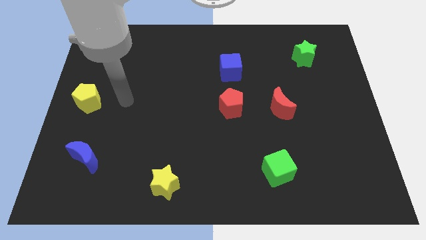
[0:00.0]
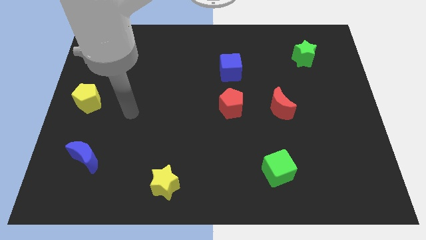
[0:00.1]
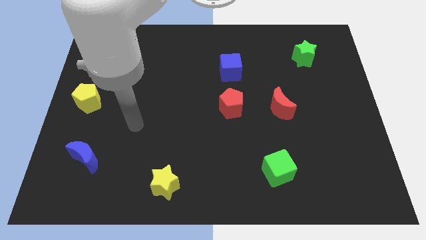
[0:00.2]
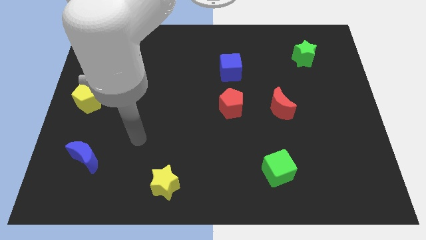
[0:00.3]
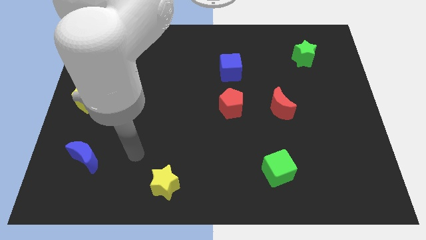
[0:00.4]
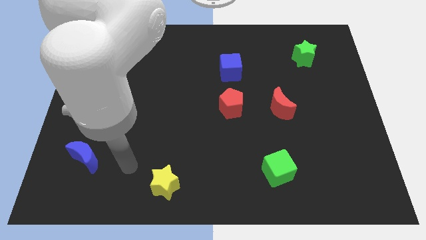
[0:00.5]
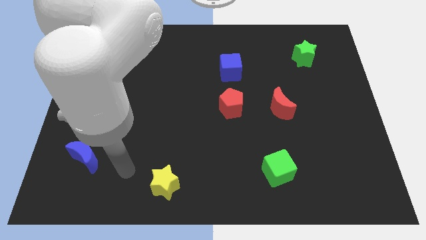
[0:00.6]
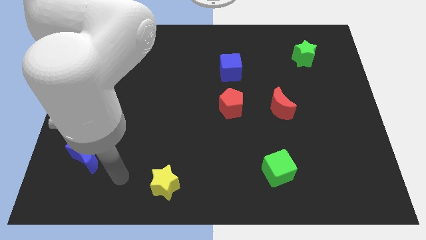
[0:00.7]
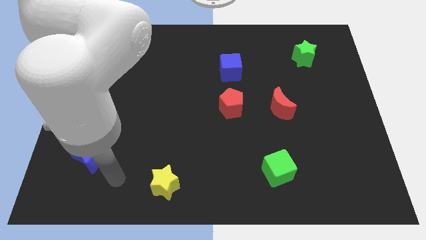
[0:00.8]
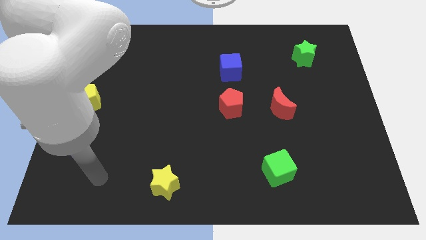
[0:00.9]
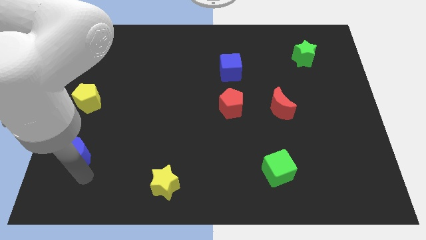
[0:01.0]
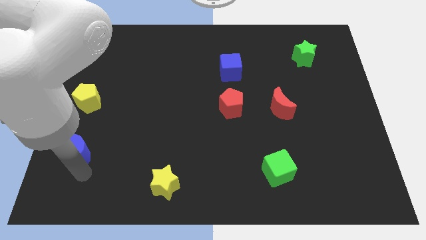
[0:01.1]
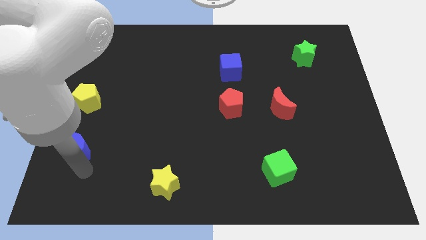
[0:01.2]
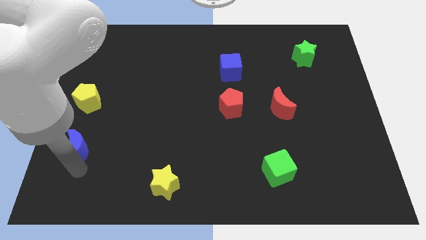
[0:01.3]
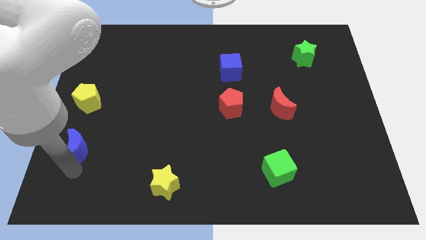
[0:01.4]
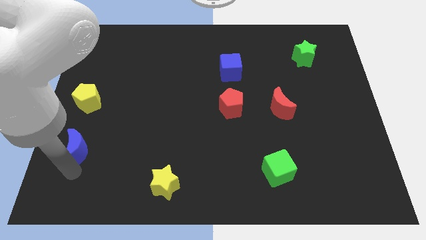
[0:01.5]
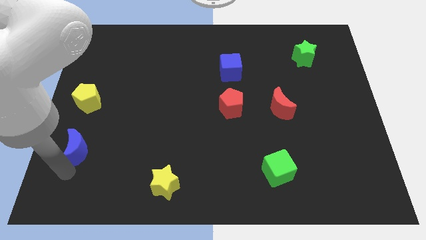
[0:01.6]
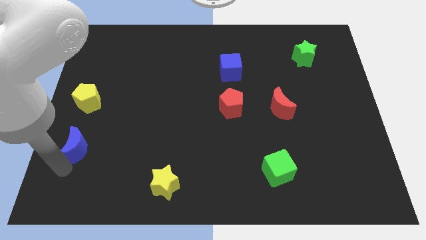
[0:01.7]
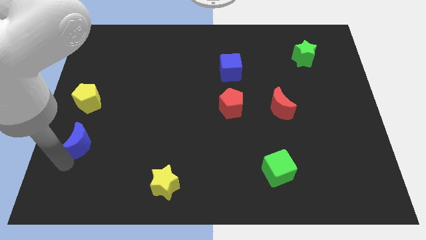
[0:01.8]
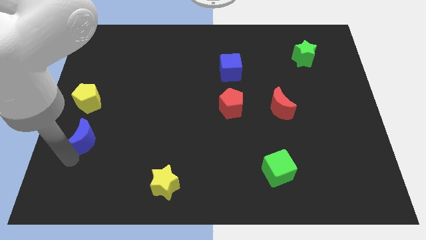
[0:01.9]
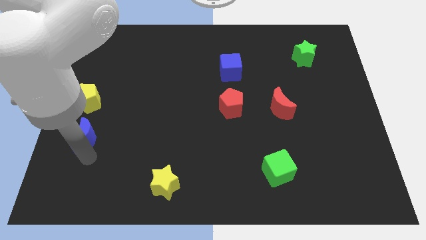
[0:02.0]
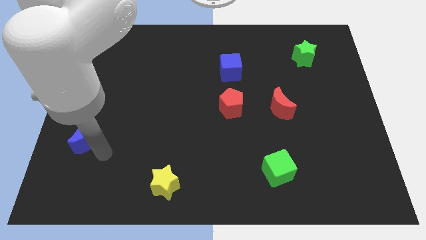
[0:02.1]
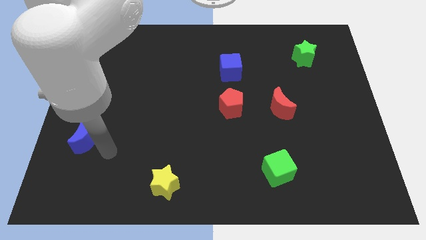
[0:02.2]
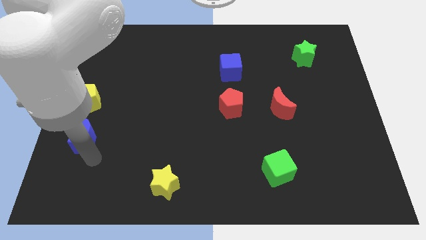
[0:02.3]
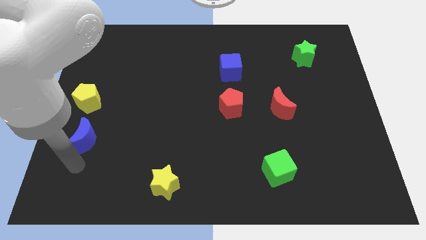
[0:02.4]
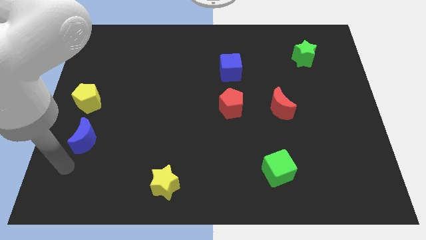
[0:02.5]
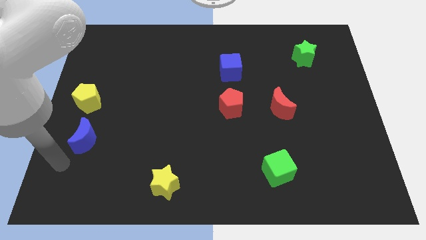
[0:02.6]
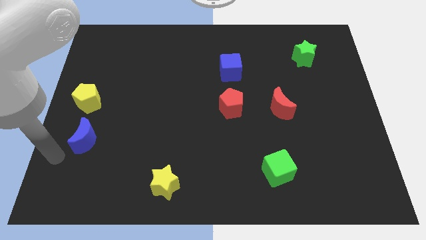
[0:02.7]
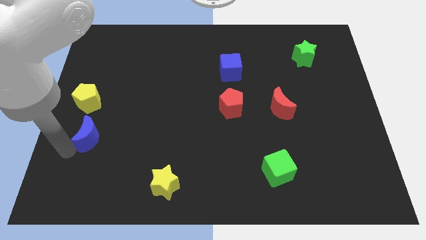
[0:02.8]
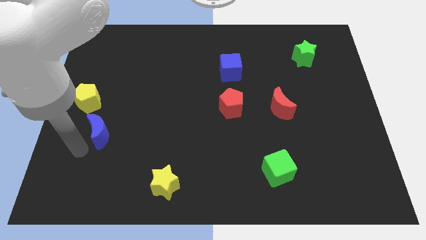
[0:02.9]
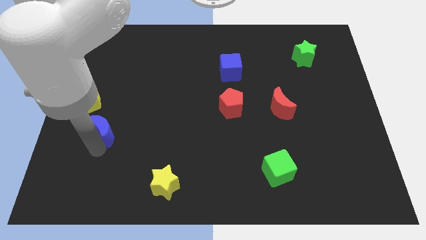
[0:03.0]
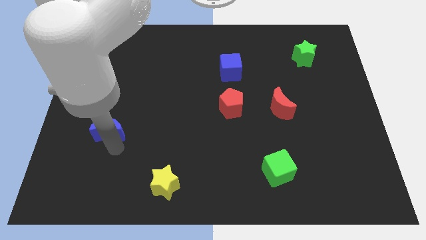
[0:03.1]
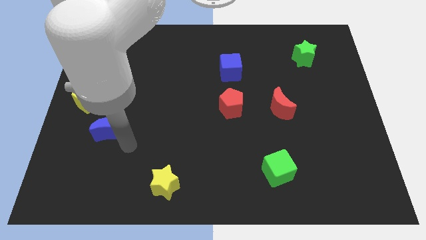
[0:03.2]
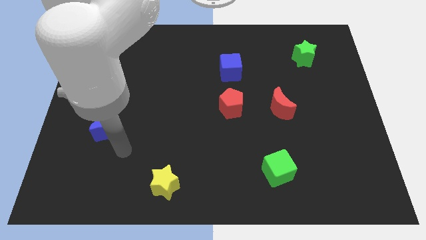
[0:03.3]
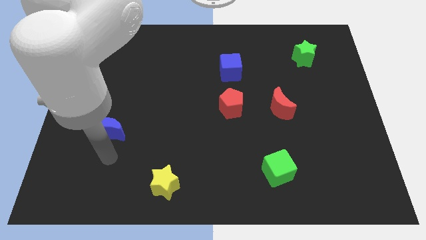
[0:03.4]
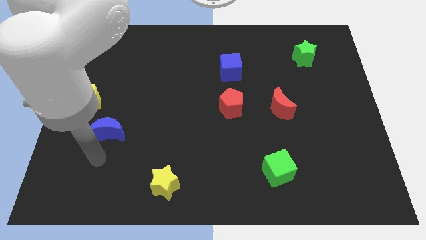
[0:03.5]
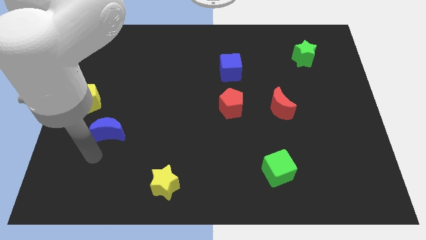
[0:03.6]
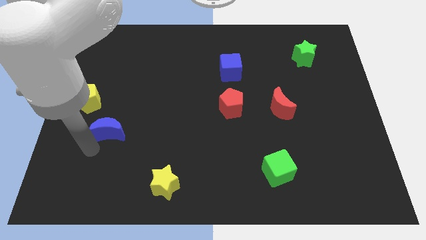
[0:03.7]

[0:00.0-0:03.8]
move the blue crescent between yellow blocks

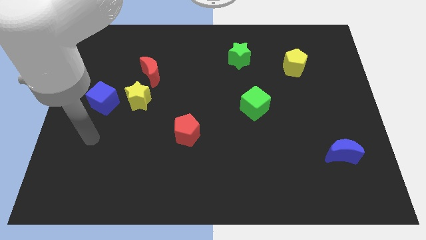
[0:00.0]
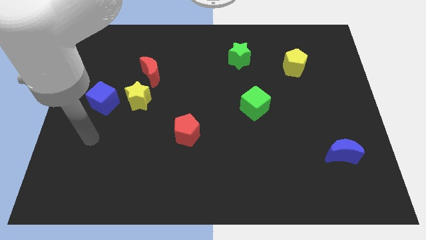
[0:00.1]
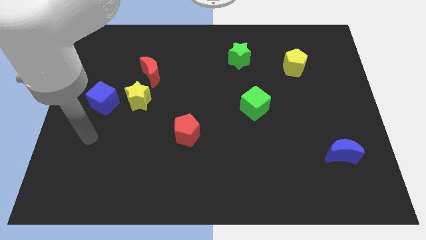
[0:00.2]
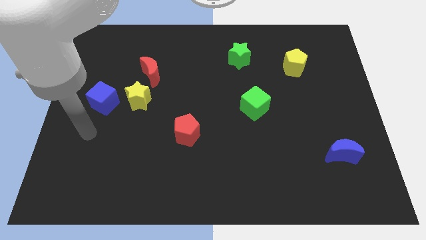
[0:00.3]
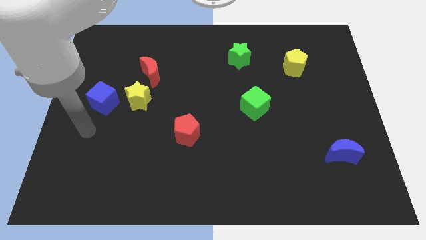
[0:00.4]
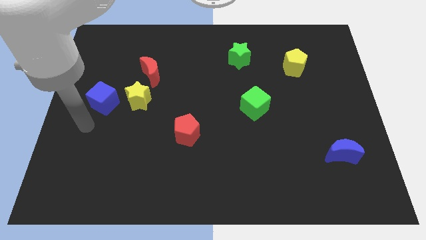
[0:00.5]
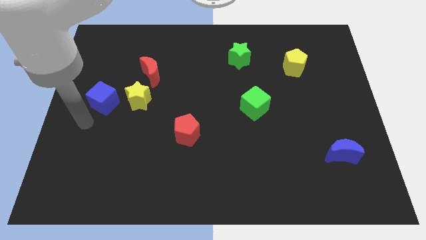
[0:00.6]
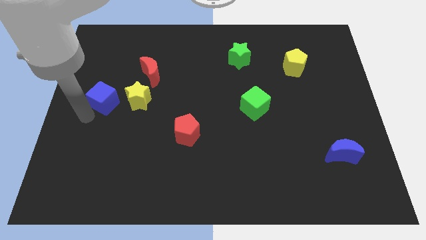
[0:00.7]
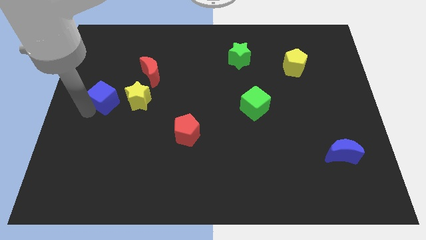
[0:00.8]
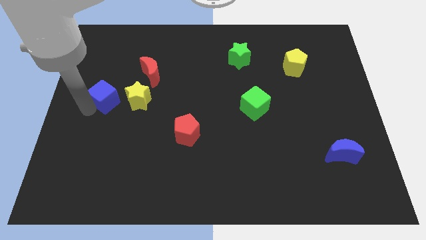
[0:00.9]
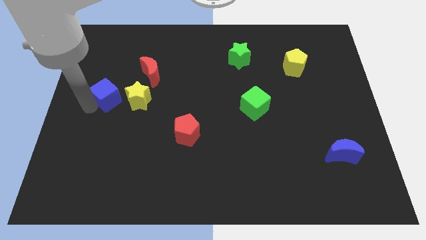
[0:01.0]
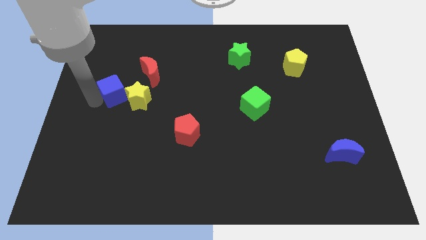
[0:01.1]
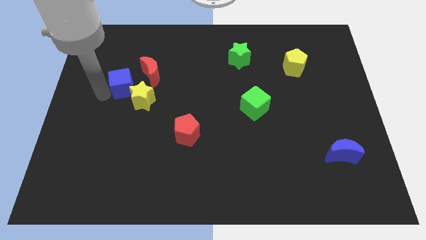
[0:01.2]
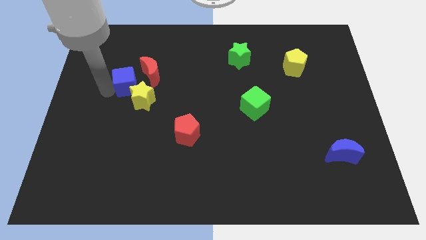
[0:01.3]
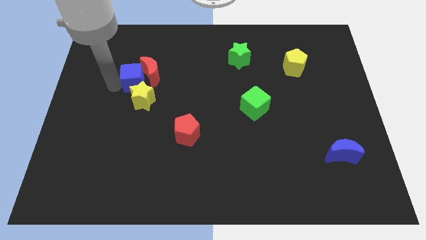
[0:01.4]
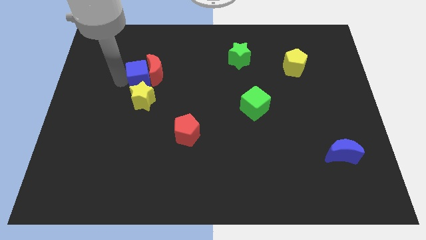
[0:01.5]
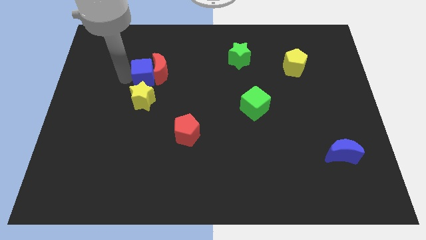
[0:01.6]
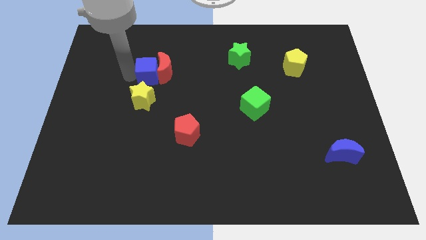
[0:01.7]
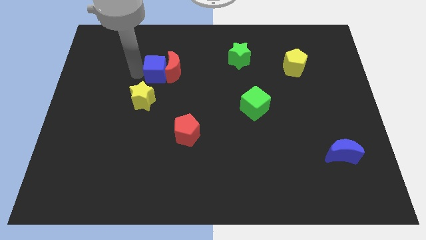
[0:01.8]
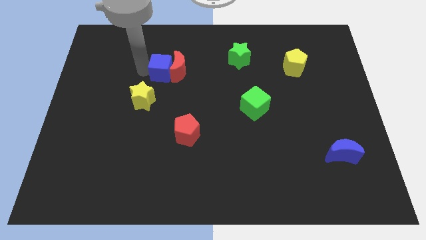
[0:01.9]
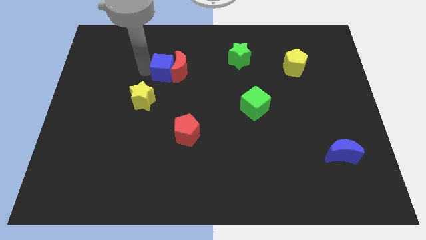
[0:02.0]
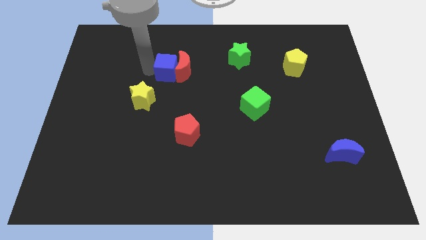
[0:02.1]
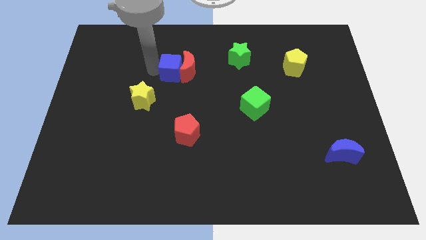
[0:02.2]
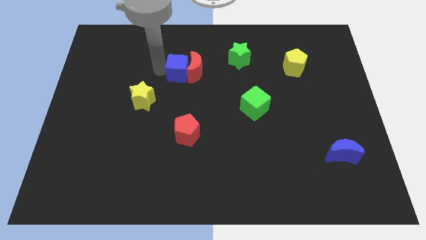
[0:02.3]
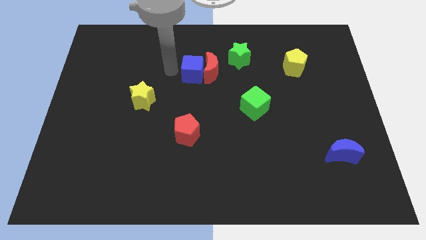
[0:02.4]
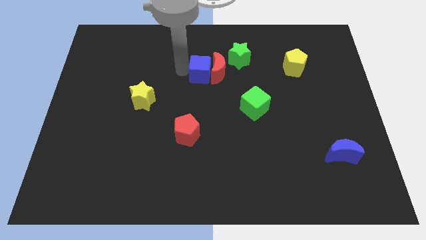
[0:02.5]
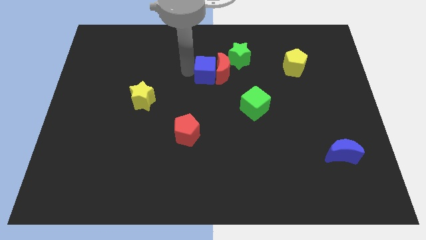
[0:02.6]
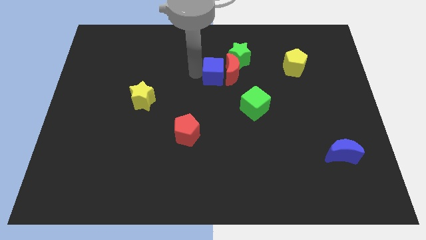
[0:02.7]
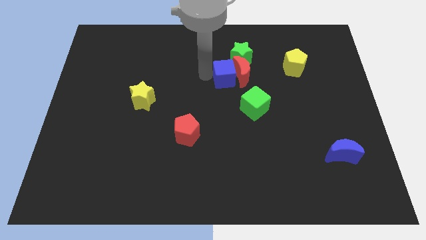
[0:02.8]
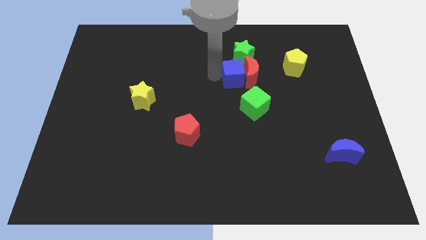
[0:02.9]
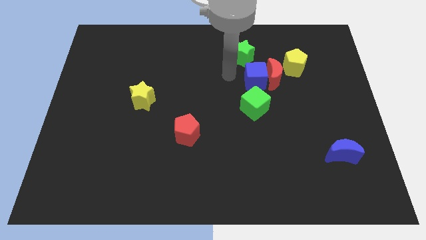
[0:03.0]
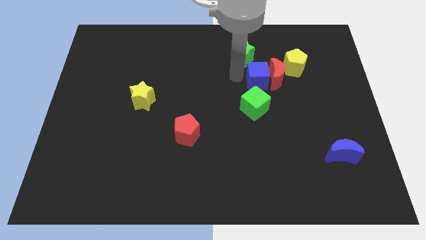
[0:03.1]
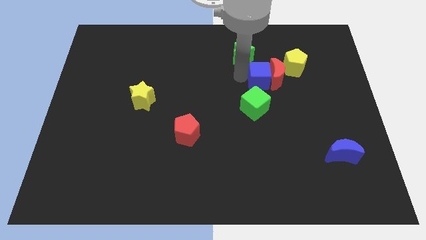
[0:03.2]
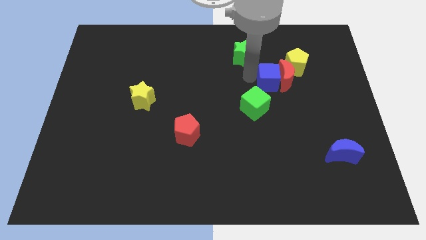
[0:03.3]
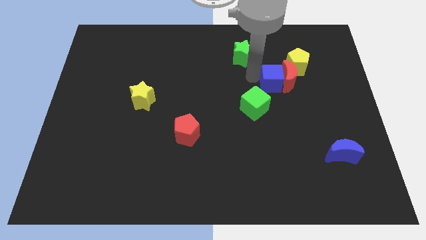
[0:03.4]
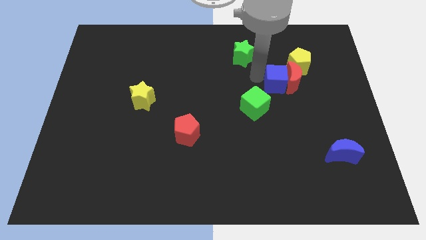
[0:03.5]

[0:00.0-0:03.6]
push the red crescent and blue cube to the bottom left side of the yellow pentagon

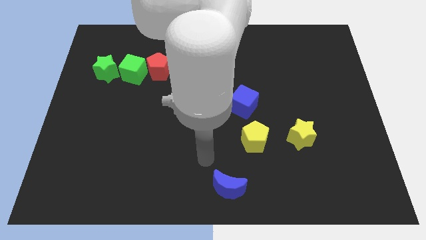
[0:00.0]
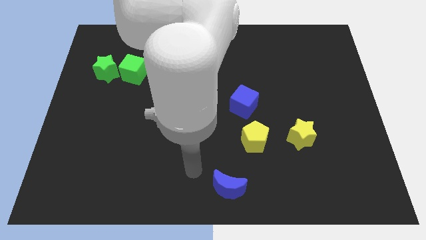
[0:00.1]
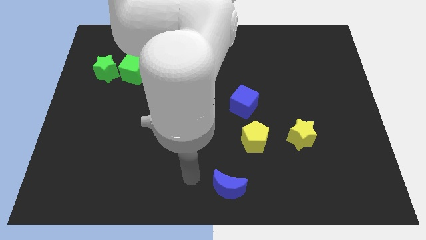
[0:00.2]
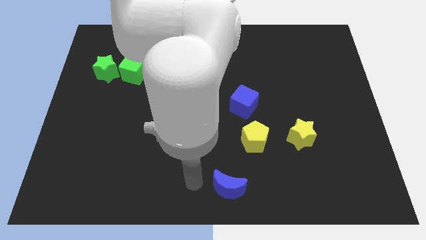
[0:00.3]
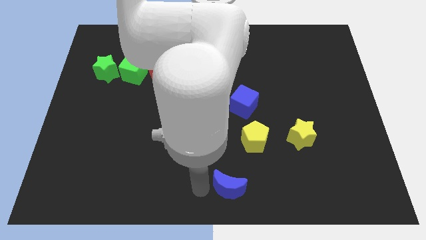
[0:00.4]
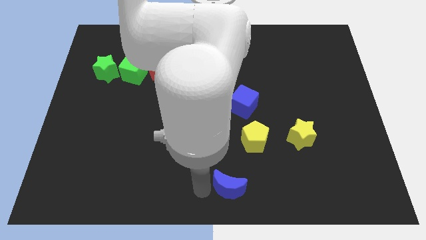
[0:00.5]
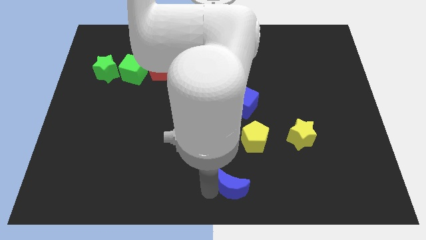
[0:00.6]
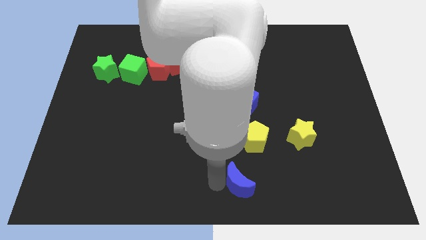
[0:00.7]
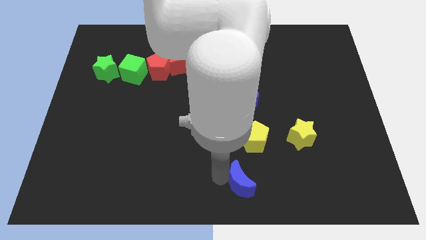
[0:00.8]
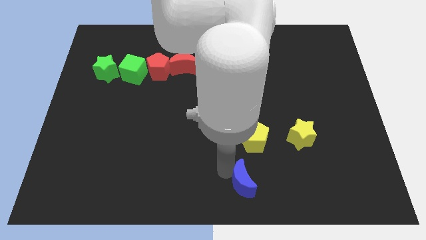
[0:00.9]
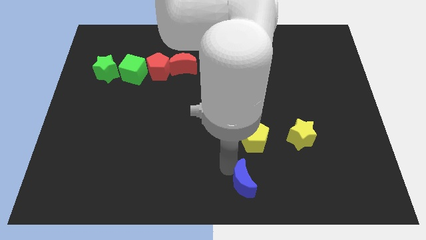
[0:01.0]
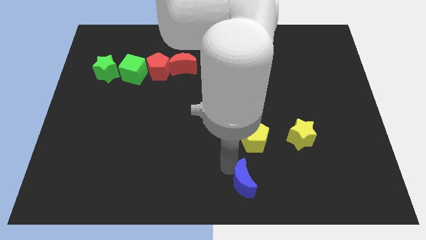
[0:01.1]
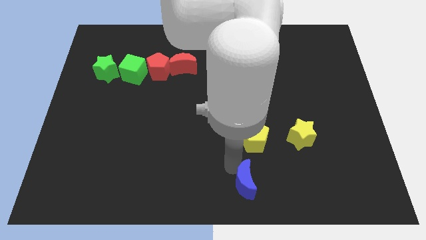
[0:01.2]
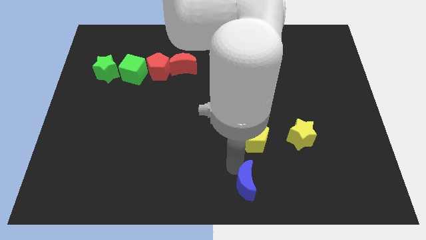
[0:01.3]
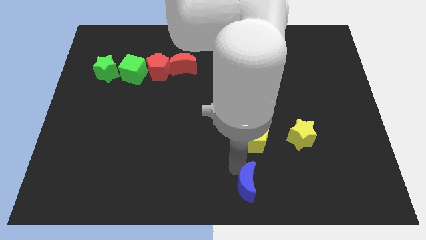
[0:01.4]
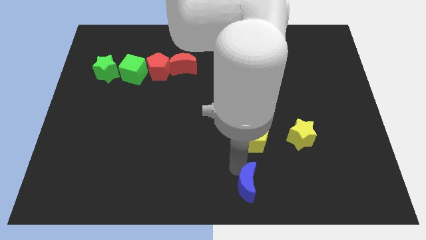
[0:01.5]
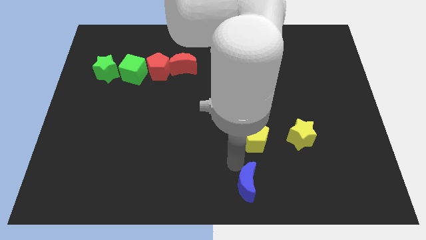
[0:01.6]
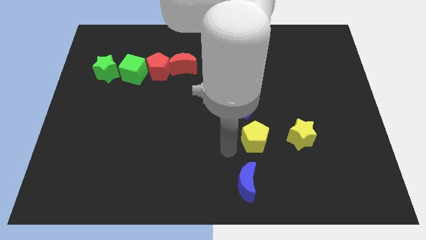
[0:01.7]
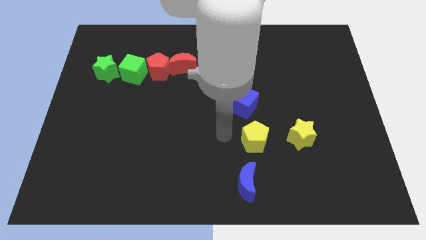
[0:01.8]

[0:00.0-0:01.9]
move the blue crescent below the yellow pentagon
